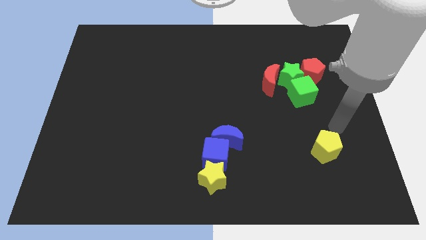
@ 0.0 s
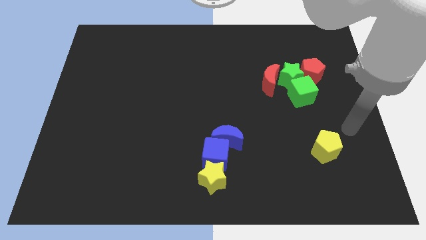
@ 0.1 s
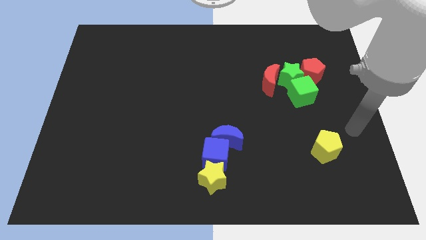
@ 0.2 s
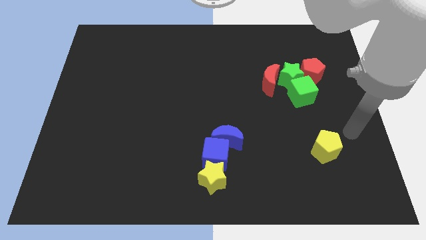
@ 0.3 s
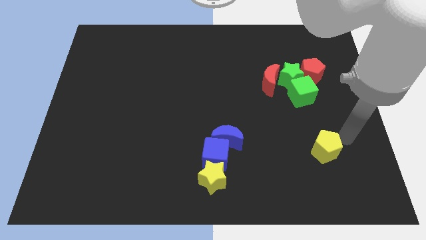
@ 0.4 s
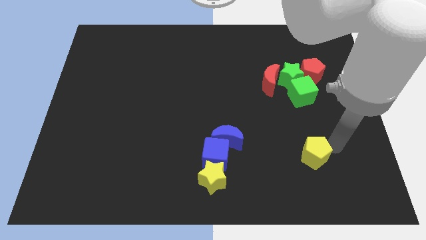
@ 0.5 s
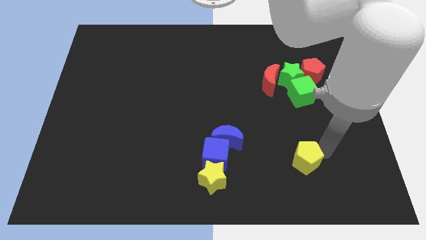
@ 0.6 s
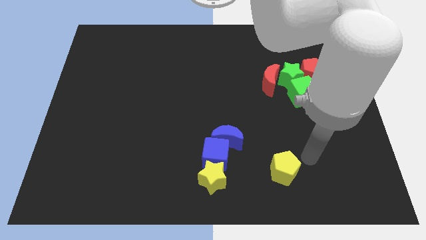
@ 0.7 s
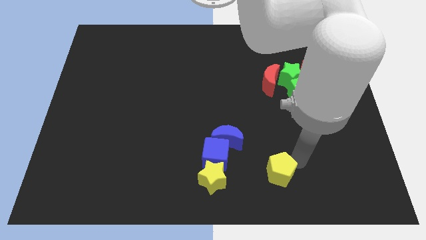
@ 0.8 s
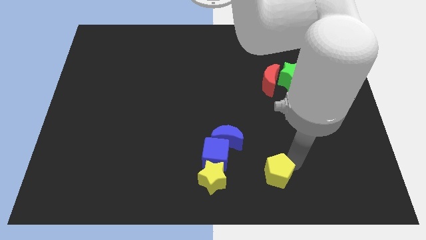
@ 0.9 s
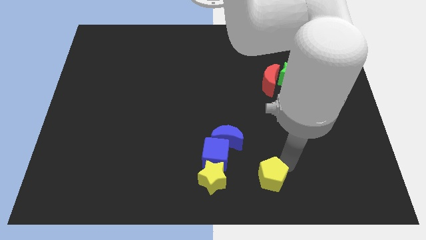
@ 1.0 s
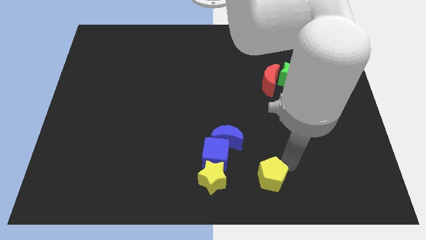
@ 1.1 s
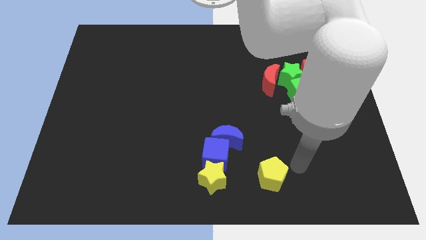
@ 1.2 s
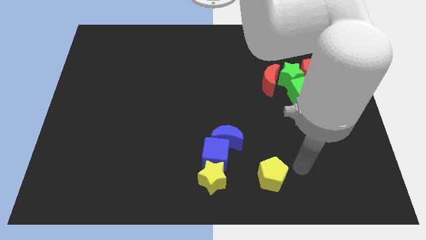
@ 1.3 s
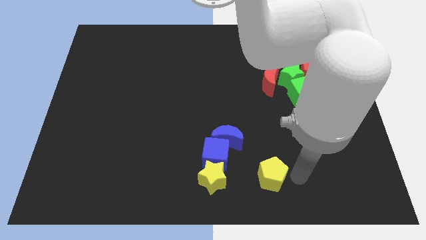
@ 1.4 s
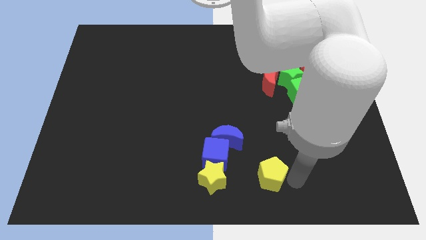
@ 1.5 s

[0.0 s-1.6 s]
put the yellow star and yellow pentagon in a line horizontally

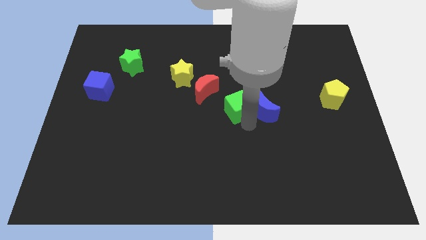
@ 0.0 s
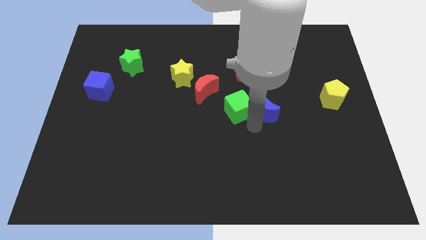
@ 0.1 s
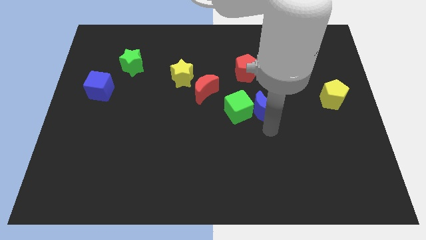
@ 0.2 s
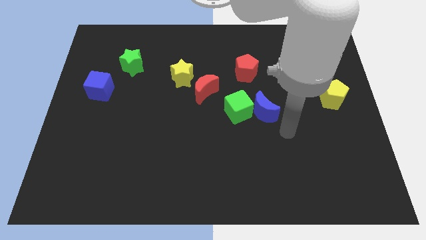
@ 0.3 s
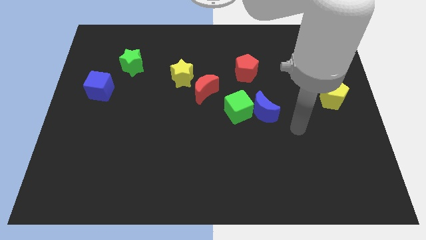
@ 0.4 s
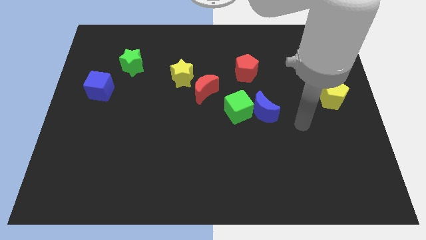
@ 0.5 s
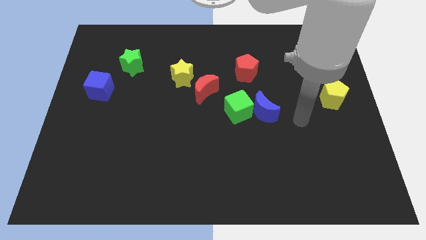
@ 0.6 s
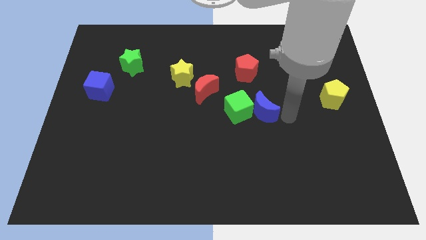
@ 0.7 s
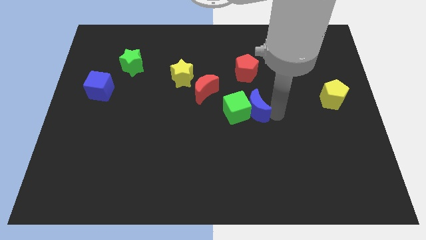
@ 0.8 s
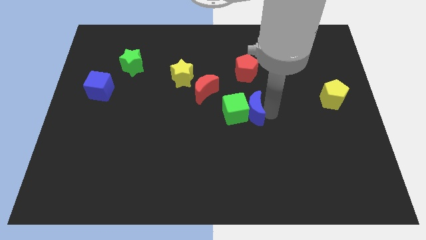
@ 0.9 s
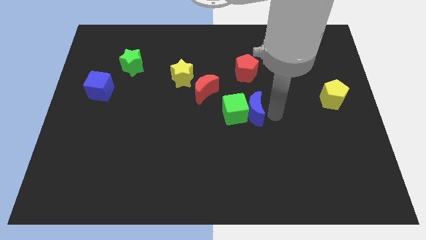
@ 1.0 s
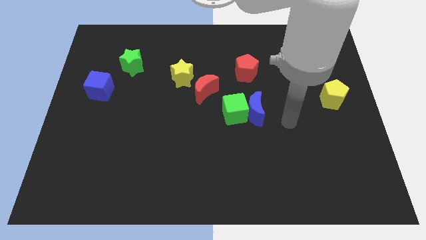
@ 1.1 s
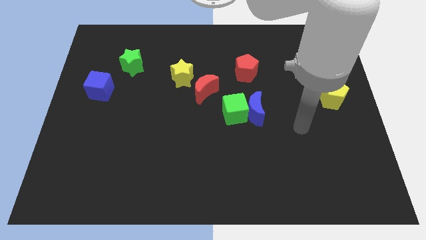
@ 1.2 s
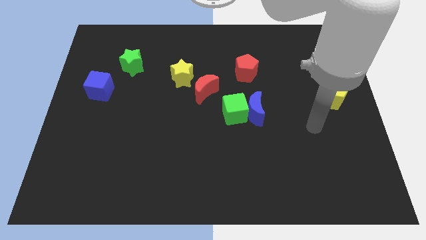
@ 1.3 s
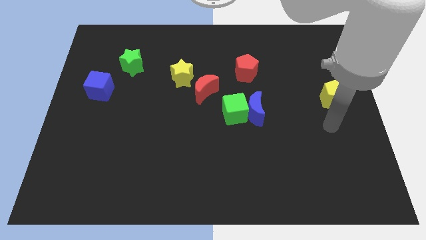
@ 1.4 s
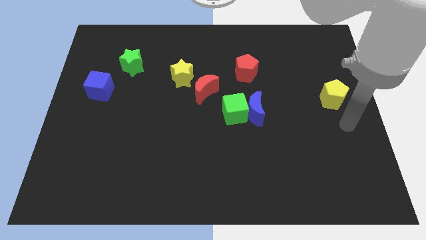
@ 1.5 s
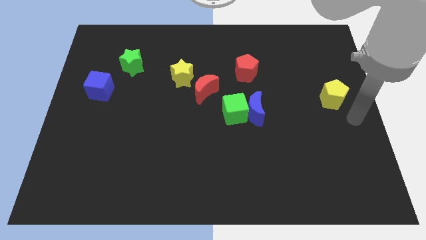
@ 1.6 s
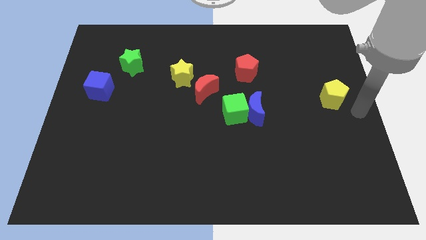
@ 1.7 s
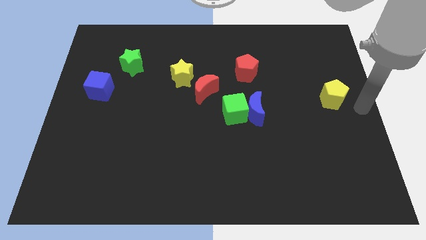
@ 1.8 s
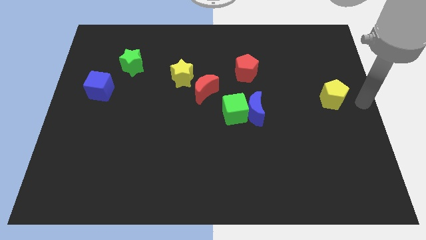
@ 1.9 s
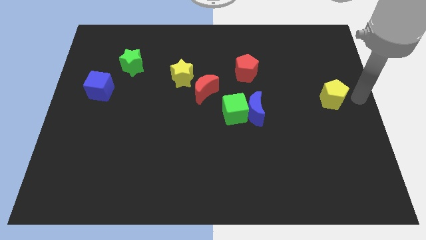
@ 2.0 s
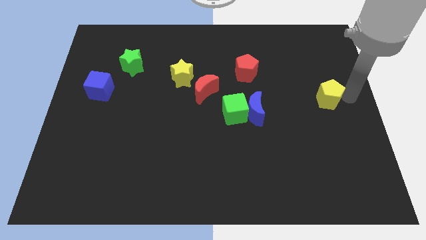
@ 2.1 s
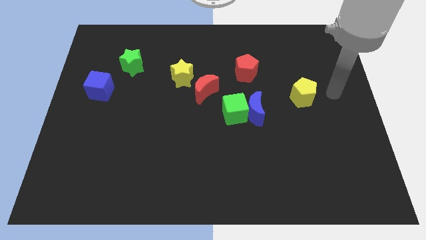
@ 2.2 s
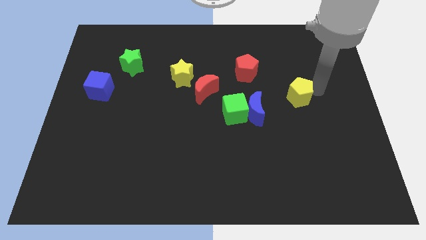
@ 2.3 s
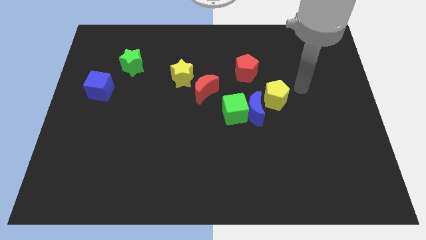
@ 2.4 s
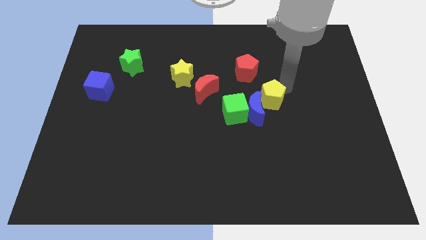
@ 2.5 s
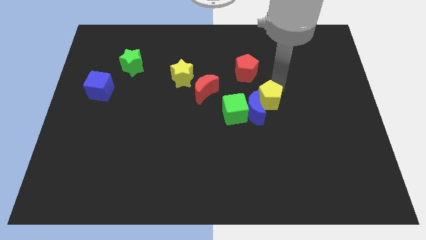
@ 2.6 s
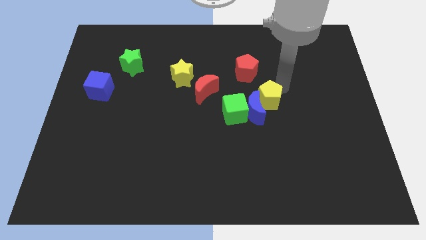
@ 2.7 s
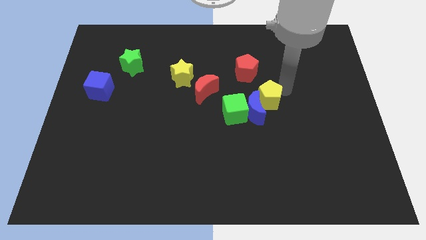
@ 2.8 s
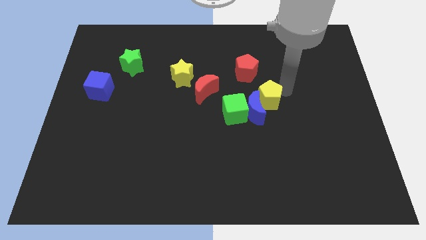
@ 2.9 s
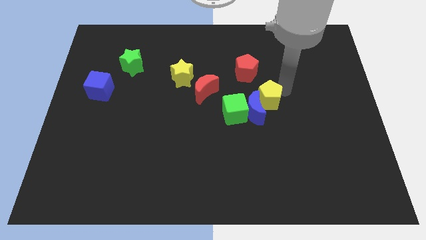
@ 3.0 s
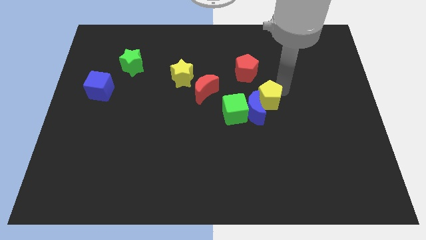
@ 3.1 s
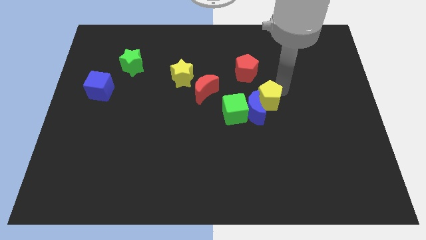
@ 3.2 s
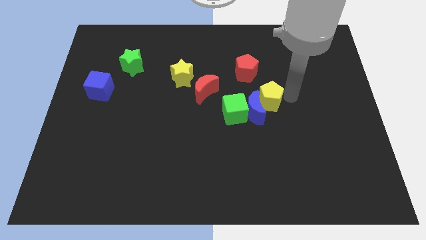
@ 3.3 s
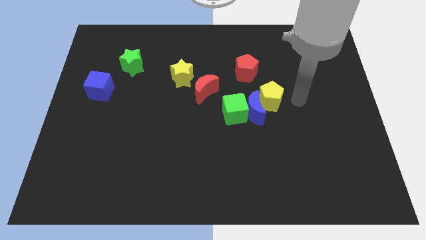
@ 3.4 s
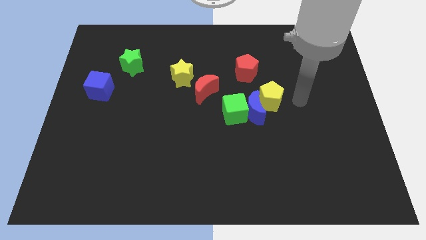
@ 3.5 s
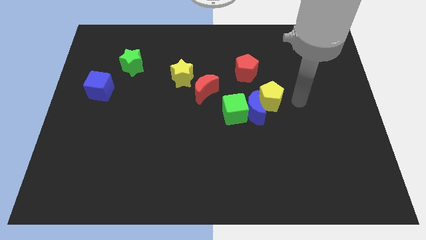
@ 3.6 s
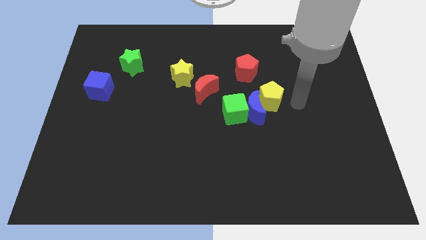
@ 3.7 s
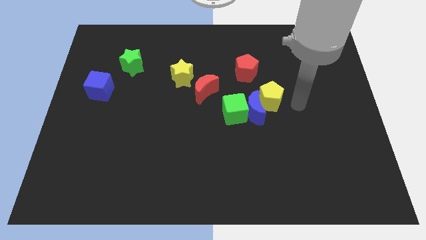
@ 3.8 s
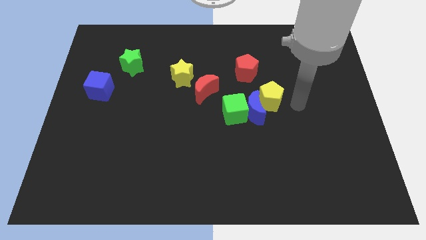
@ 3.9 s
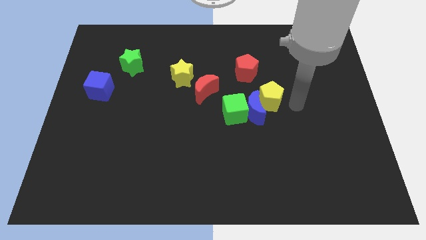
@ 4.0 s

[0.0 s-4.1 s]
move the yellow pentagon right to the blue moon

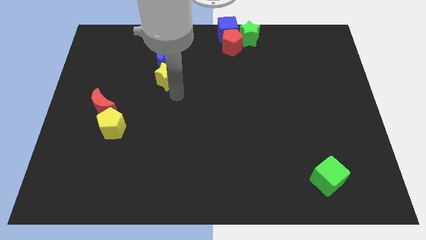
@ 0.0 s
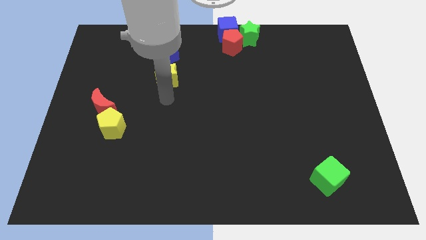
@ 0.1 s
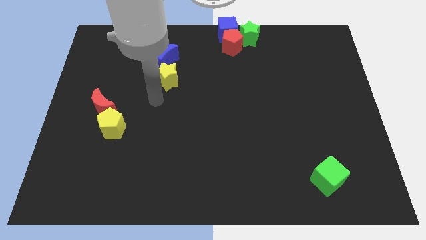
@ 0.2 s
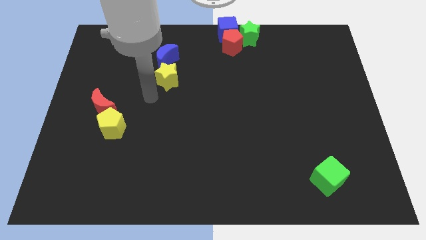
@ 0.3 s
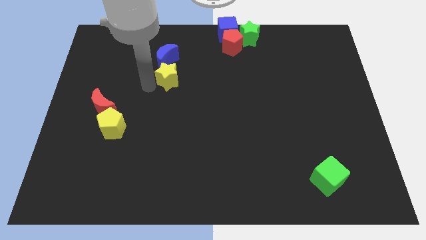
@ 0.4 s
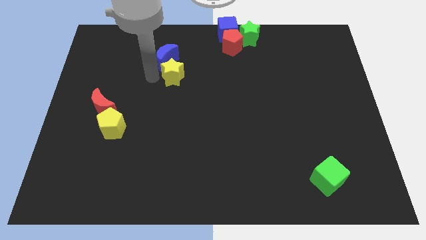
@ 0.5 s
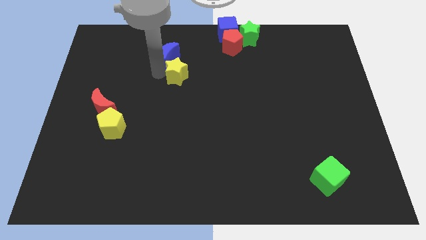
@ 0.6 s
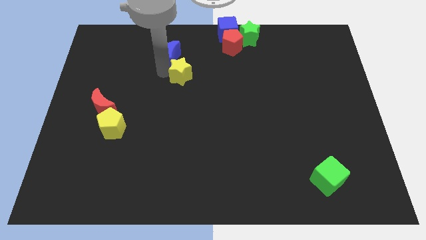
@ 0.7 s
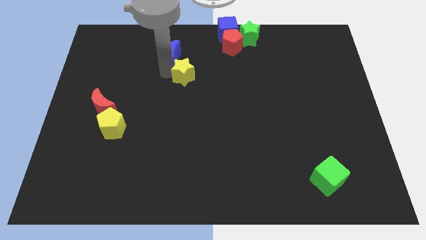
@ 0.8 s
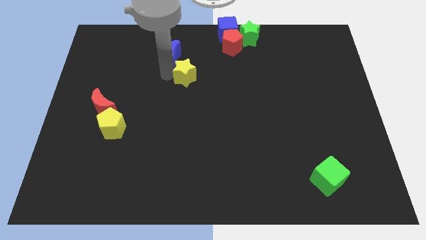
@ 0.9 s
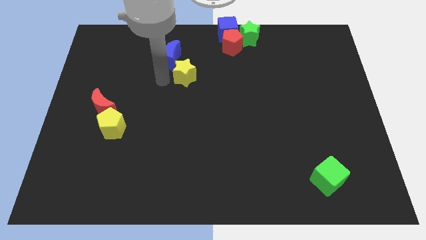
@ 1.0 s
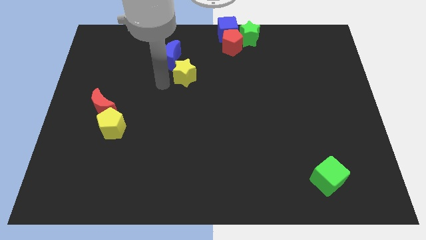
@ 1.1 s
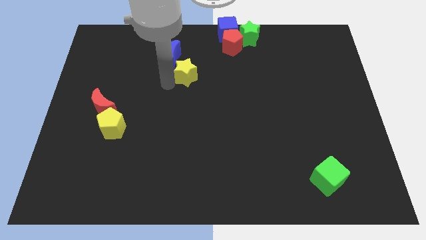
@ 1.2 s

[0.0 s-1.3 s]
separate the yellow star and blue crescent

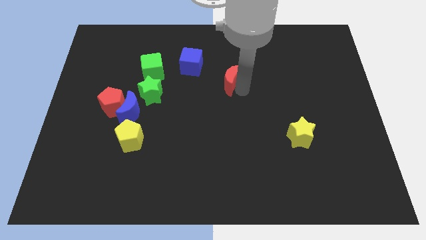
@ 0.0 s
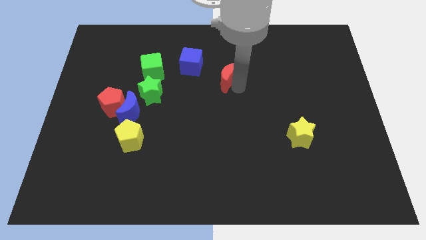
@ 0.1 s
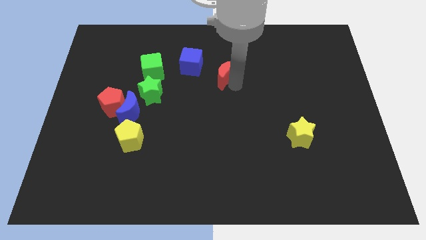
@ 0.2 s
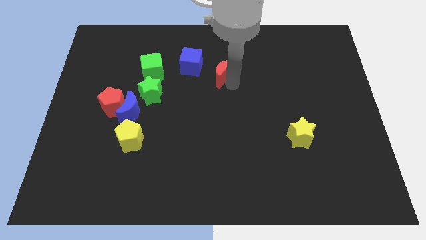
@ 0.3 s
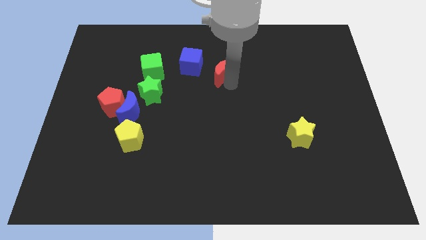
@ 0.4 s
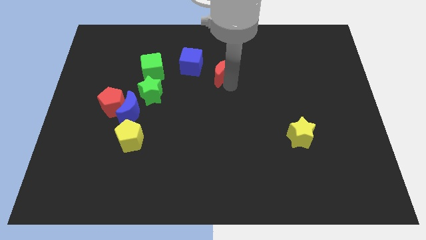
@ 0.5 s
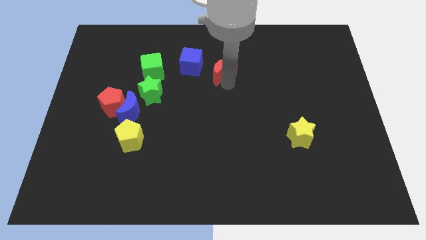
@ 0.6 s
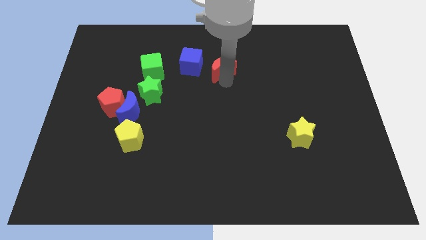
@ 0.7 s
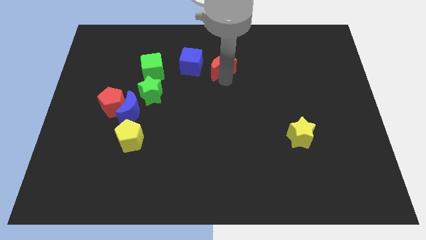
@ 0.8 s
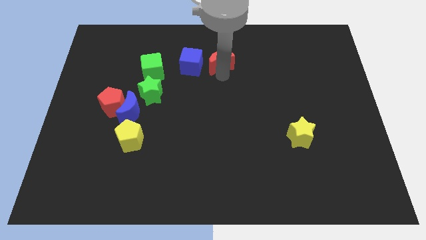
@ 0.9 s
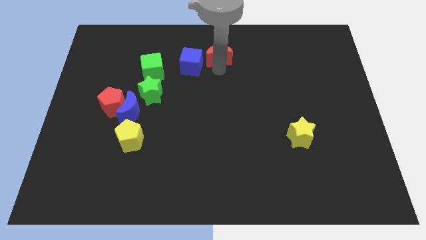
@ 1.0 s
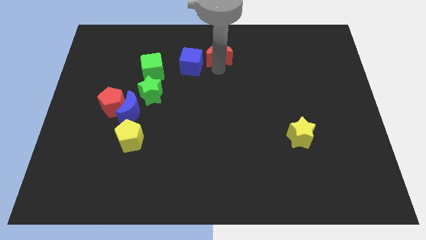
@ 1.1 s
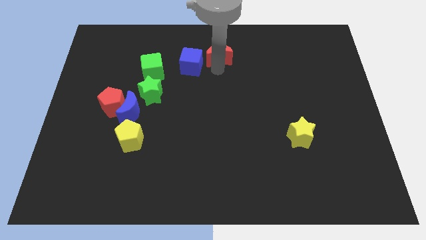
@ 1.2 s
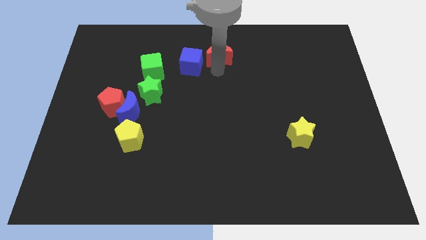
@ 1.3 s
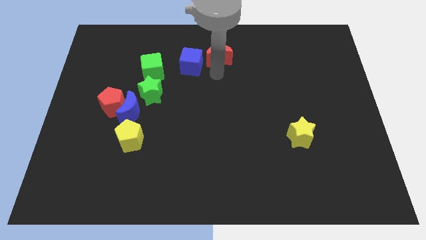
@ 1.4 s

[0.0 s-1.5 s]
move the red crescent to the top right of blue cube

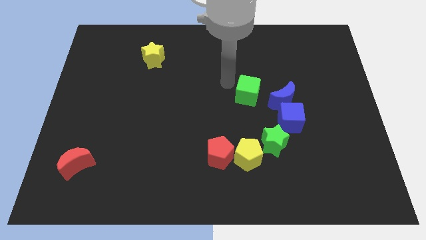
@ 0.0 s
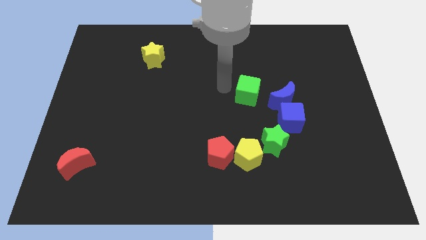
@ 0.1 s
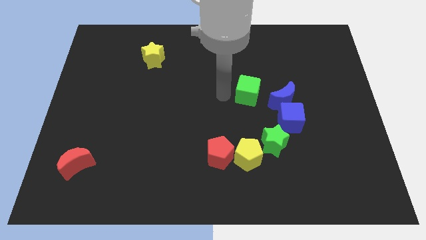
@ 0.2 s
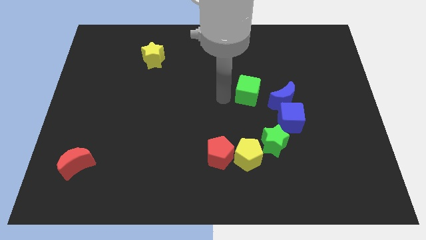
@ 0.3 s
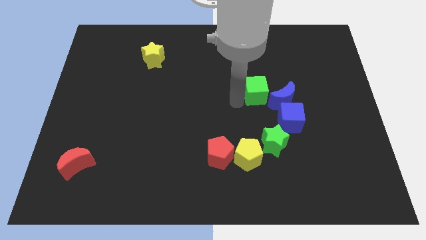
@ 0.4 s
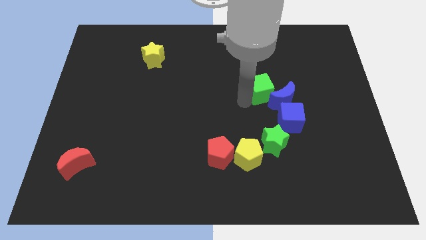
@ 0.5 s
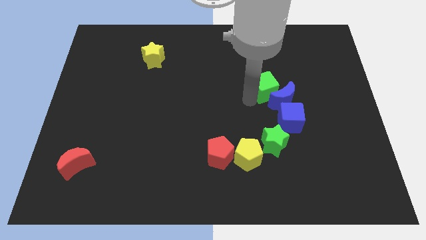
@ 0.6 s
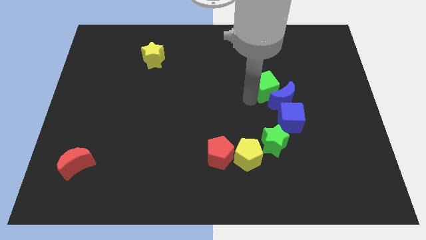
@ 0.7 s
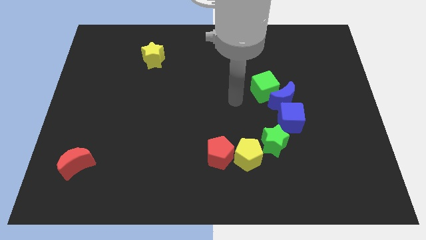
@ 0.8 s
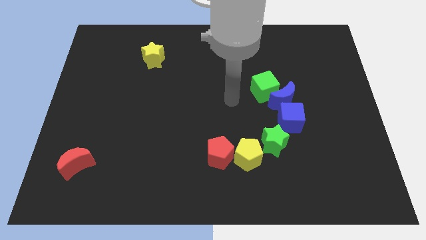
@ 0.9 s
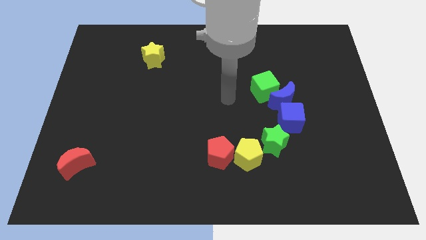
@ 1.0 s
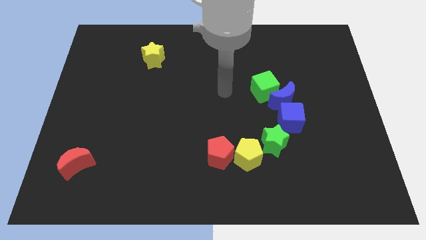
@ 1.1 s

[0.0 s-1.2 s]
place the green cube close to the blue crescent
